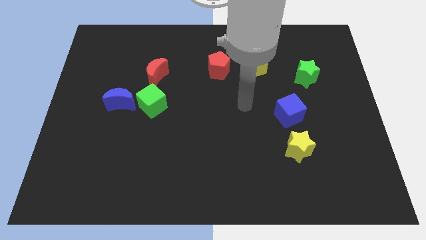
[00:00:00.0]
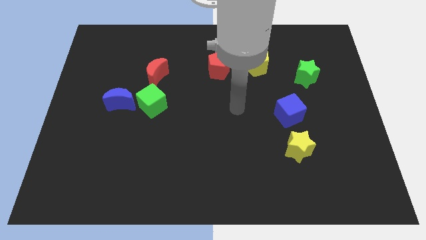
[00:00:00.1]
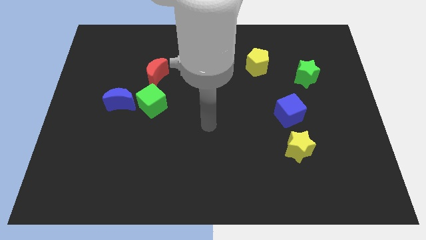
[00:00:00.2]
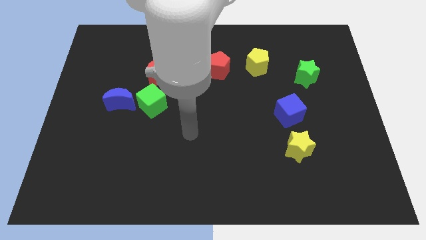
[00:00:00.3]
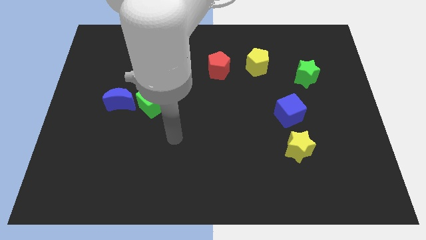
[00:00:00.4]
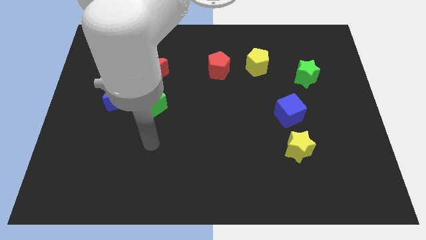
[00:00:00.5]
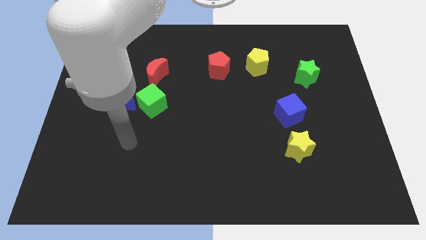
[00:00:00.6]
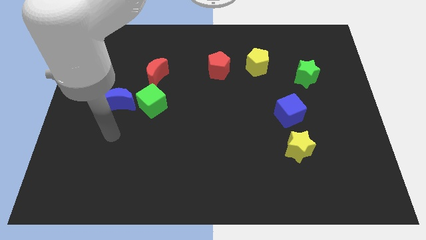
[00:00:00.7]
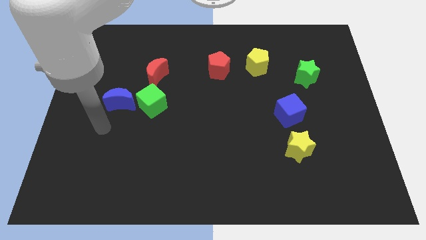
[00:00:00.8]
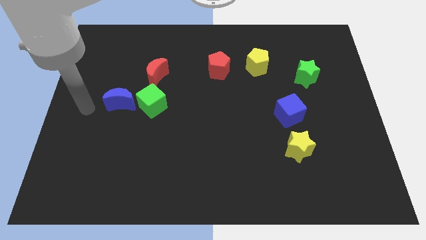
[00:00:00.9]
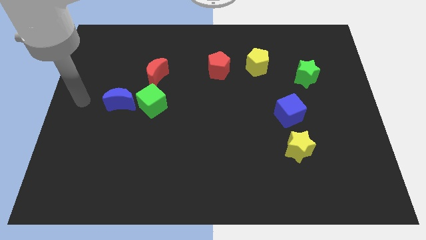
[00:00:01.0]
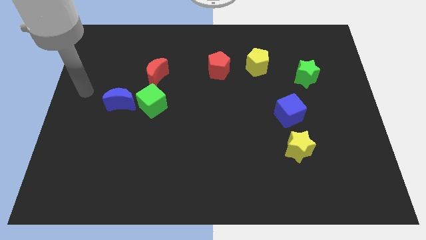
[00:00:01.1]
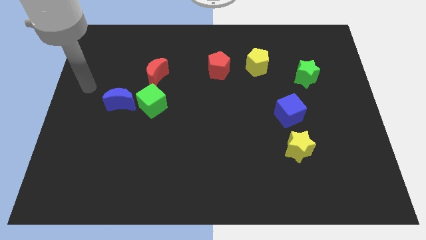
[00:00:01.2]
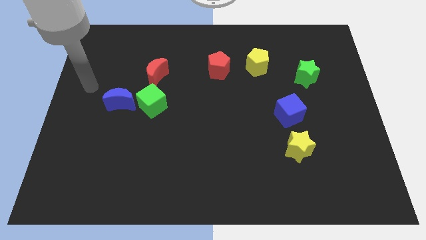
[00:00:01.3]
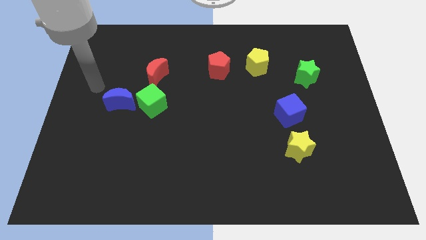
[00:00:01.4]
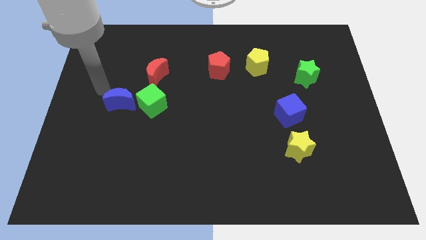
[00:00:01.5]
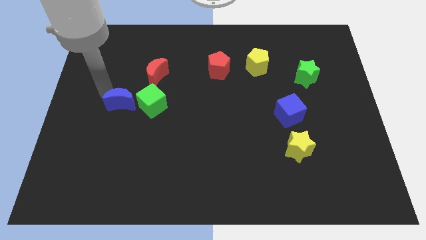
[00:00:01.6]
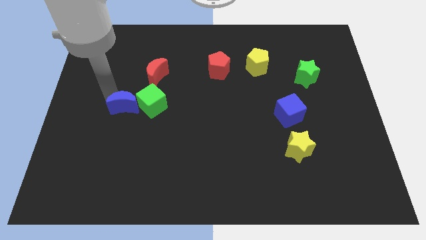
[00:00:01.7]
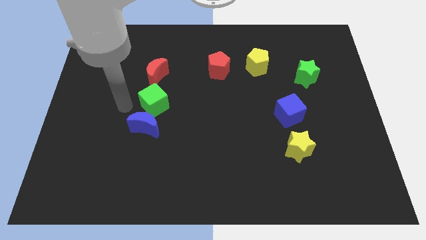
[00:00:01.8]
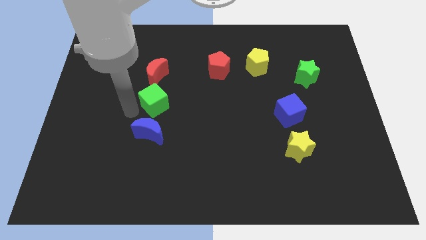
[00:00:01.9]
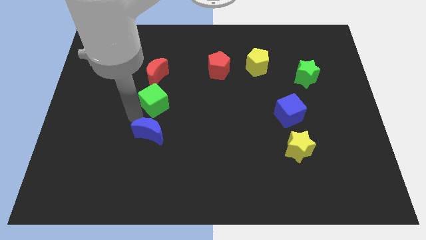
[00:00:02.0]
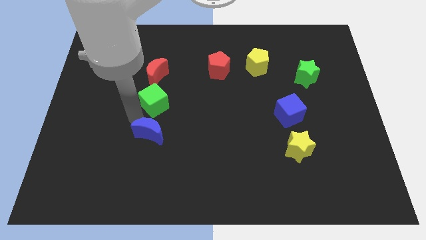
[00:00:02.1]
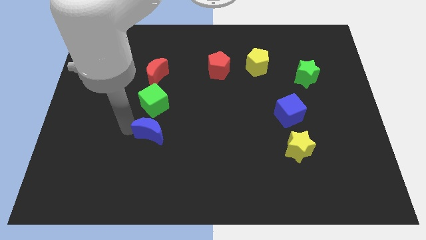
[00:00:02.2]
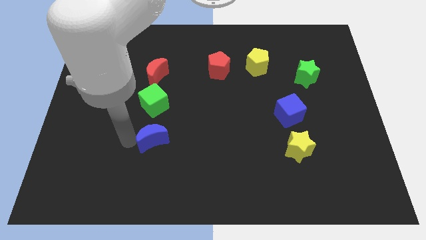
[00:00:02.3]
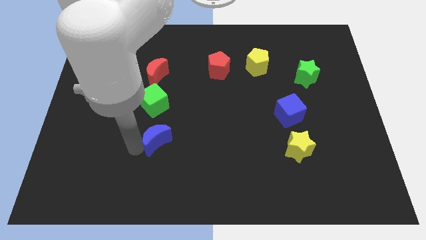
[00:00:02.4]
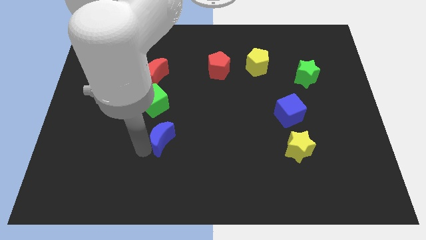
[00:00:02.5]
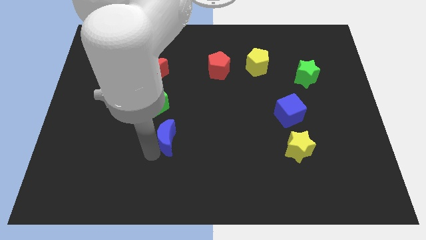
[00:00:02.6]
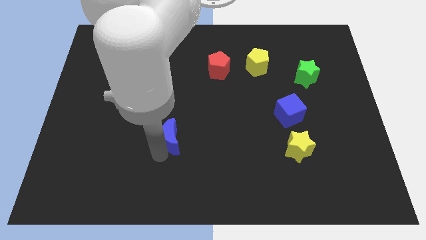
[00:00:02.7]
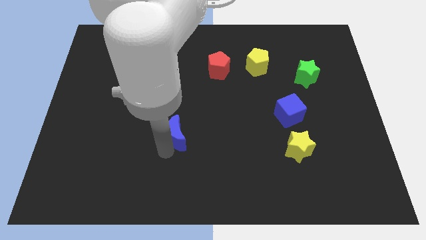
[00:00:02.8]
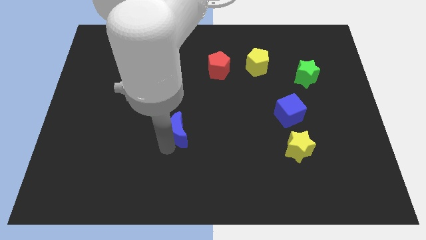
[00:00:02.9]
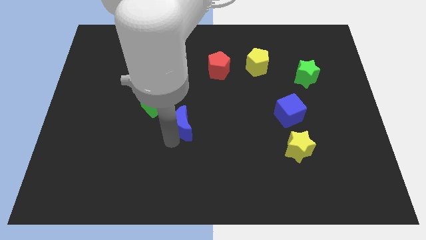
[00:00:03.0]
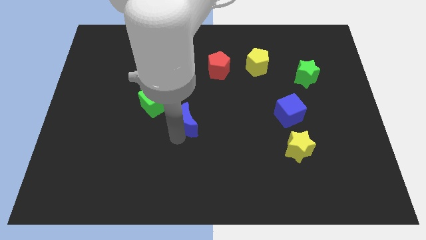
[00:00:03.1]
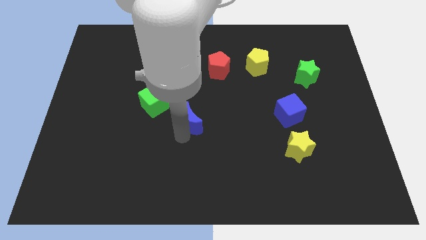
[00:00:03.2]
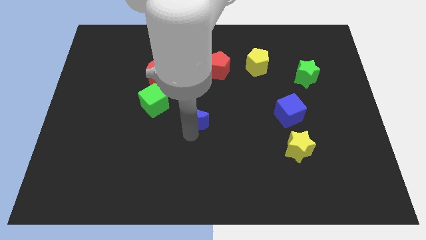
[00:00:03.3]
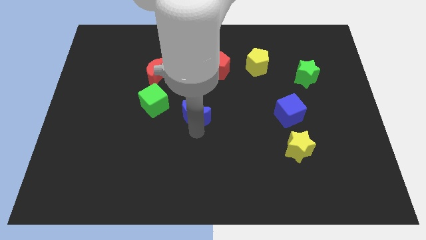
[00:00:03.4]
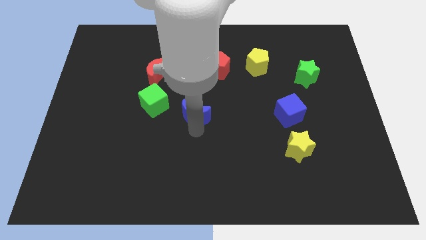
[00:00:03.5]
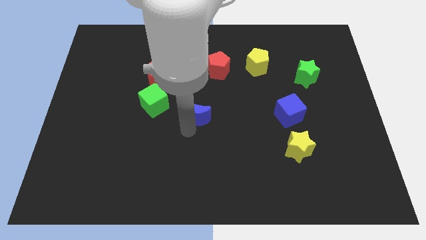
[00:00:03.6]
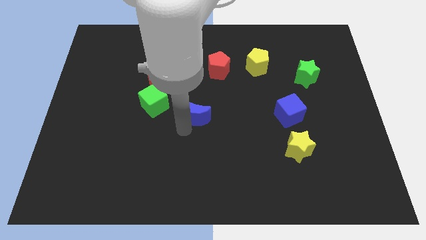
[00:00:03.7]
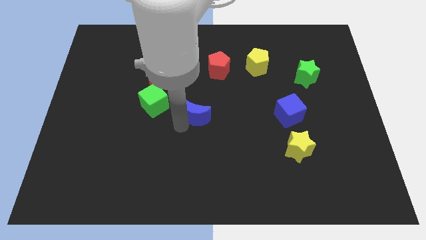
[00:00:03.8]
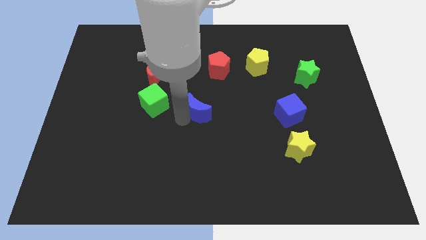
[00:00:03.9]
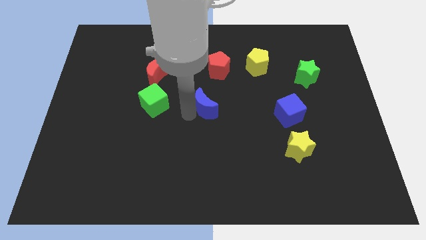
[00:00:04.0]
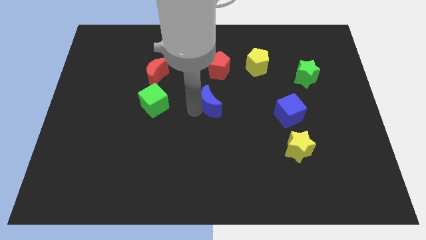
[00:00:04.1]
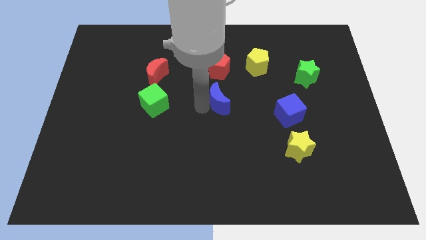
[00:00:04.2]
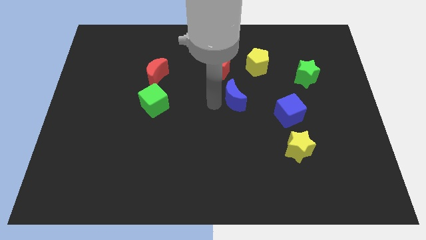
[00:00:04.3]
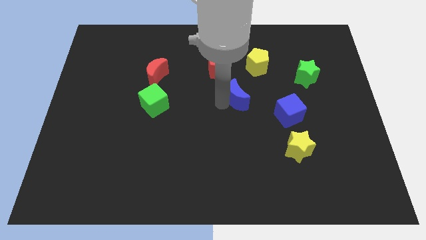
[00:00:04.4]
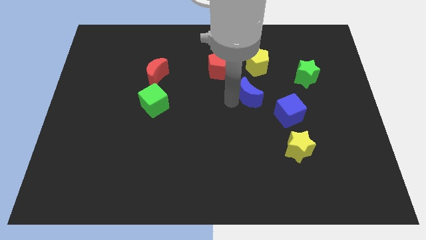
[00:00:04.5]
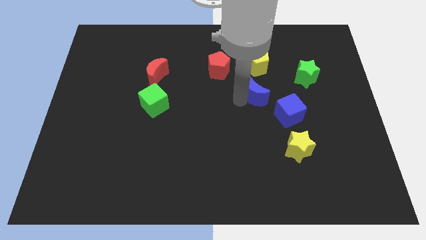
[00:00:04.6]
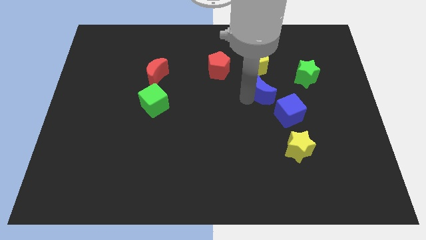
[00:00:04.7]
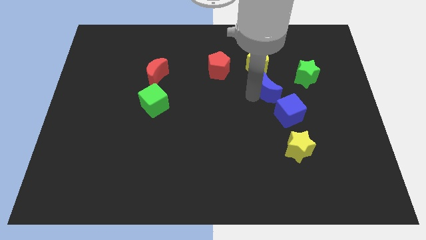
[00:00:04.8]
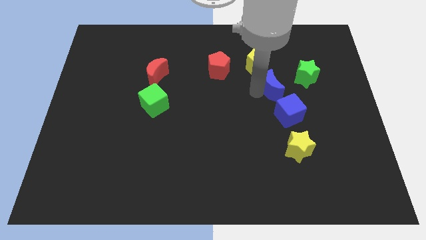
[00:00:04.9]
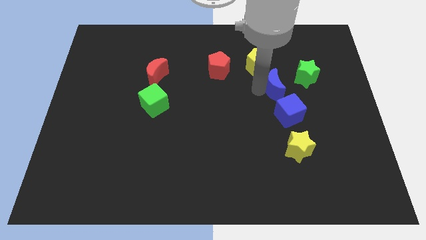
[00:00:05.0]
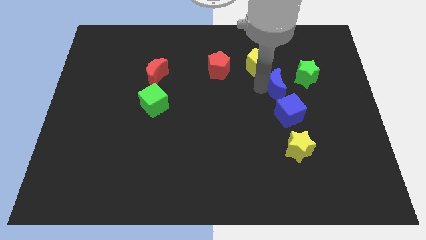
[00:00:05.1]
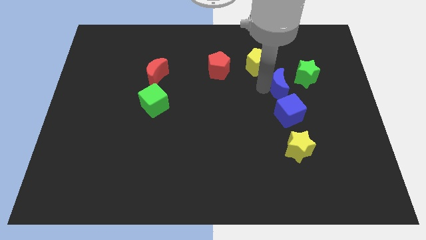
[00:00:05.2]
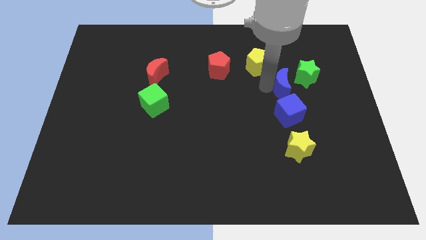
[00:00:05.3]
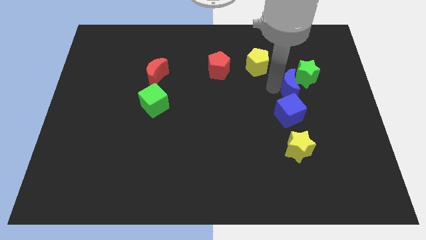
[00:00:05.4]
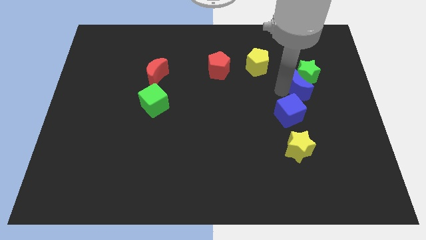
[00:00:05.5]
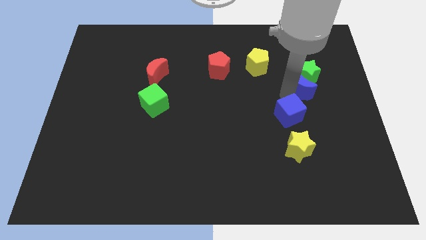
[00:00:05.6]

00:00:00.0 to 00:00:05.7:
put the blue moon towards the green star

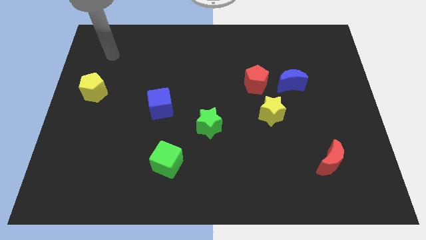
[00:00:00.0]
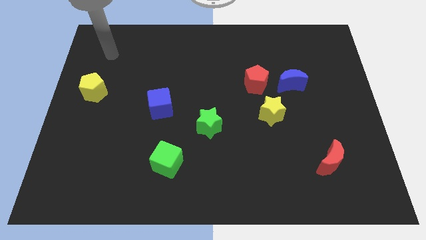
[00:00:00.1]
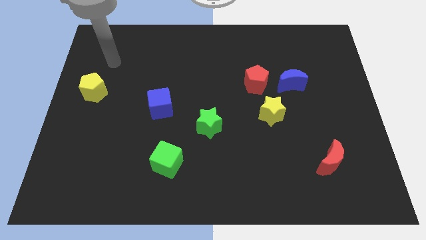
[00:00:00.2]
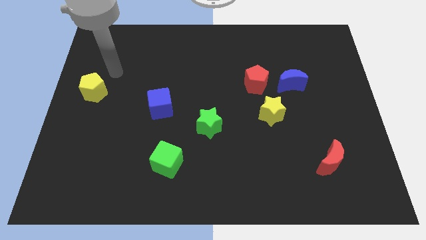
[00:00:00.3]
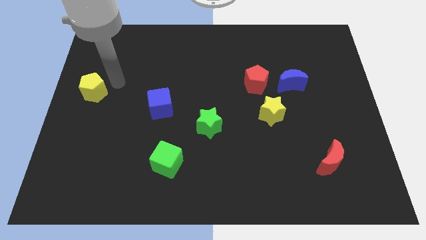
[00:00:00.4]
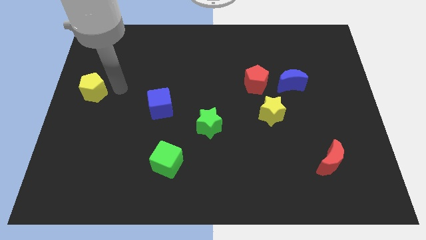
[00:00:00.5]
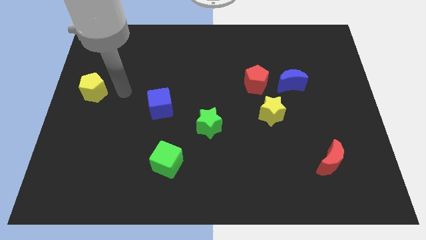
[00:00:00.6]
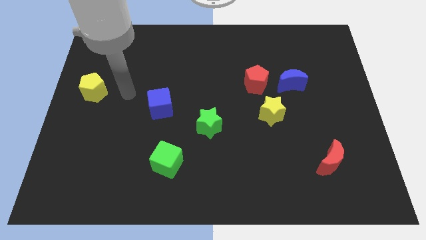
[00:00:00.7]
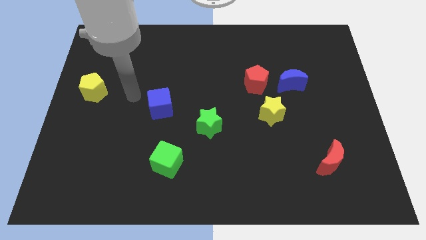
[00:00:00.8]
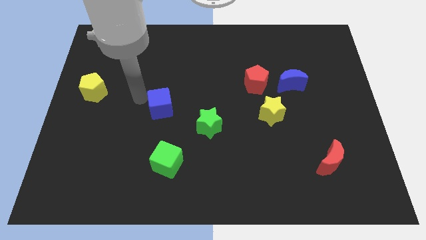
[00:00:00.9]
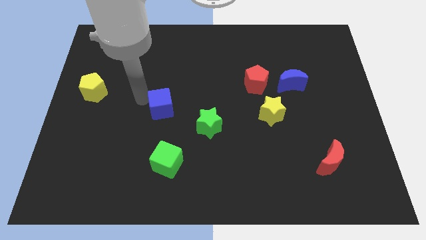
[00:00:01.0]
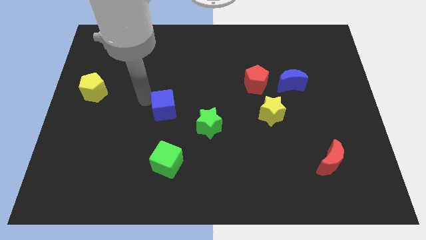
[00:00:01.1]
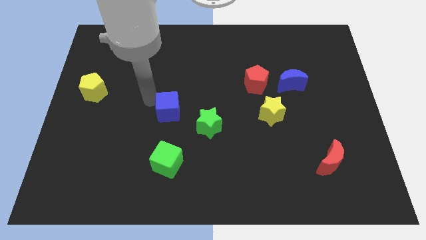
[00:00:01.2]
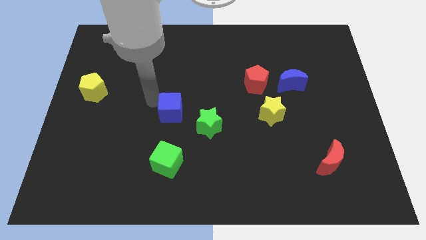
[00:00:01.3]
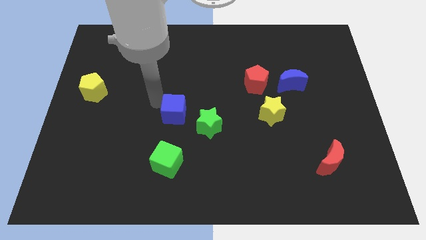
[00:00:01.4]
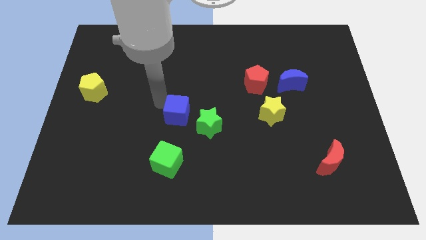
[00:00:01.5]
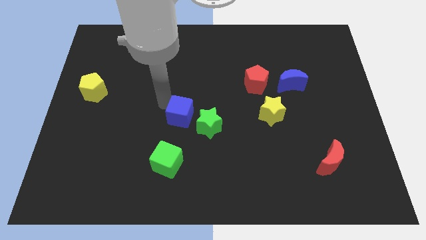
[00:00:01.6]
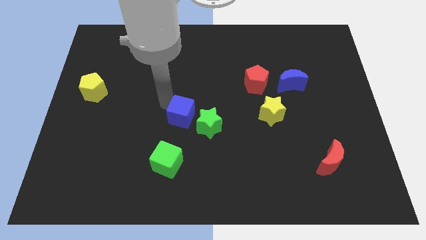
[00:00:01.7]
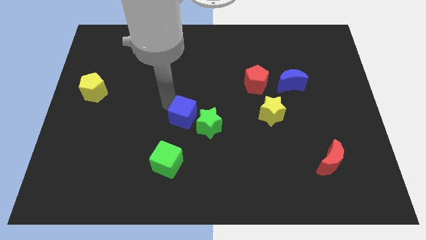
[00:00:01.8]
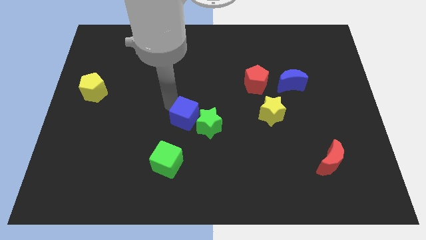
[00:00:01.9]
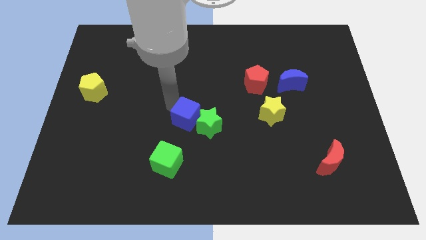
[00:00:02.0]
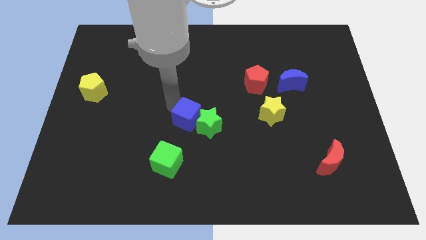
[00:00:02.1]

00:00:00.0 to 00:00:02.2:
move the blue cube to the green star

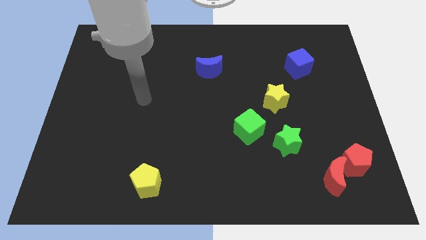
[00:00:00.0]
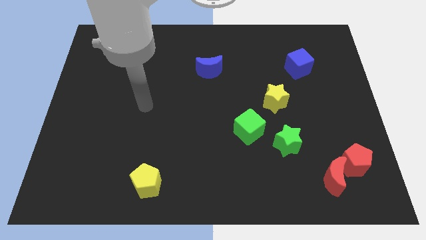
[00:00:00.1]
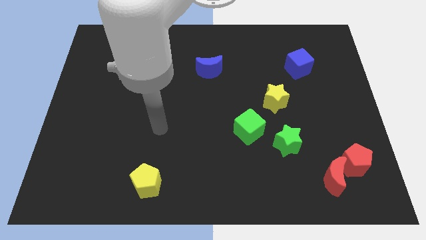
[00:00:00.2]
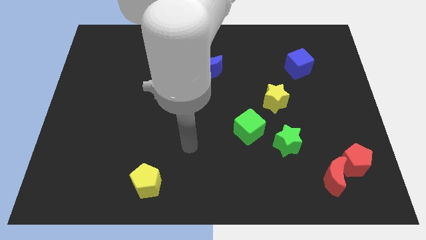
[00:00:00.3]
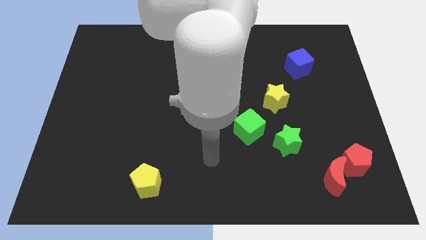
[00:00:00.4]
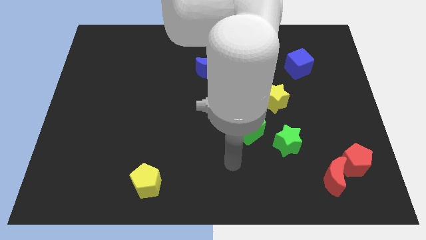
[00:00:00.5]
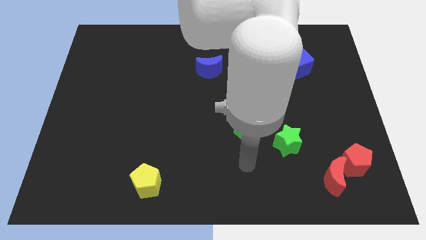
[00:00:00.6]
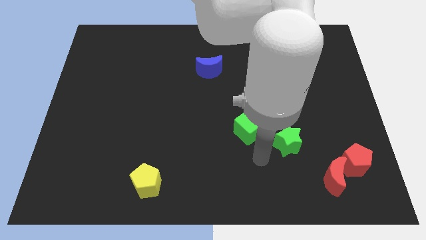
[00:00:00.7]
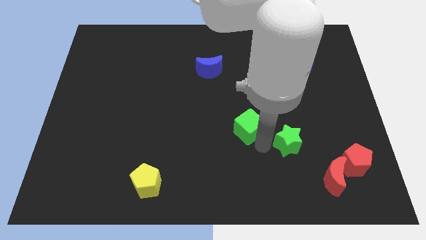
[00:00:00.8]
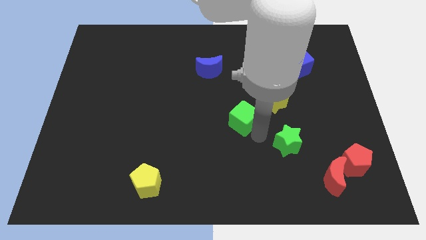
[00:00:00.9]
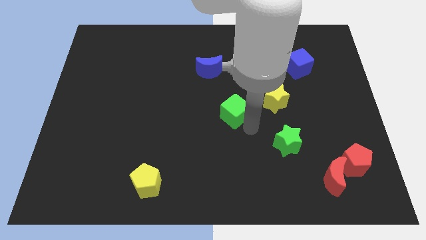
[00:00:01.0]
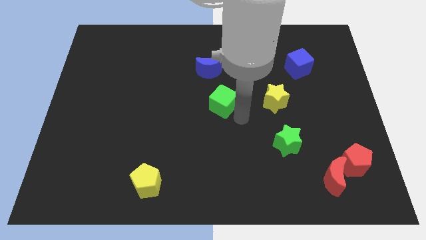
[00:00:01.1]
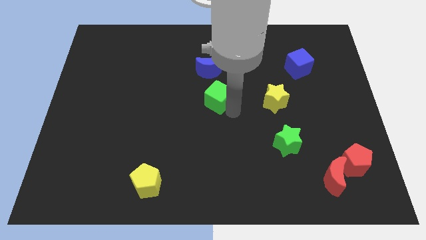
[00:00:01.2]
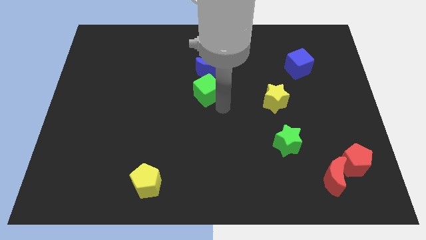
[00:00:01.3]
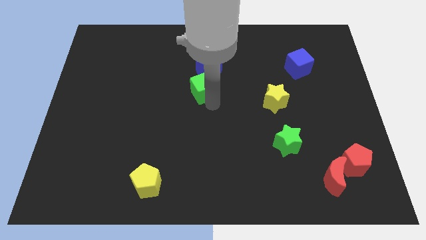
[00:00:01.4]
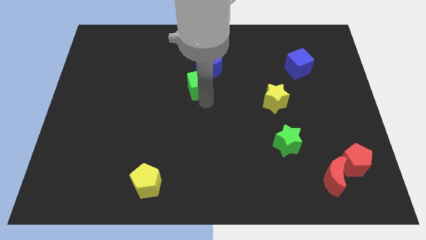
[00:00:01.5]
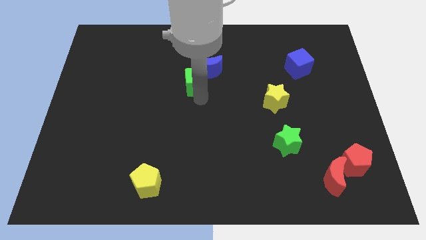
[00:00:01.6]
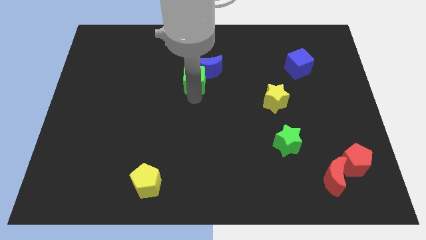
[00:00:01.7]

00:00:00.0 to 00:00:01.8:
slide the green cube to the blue moon
